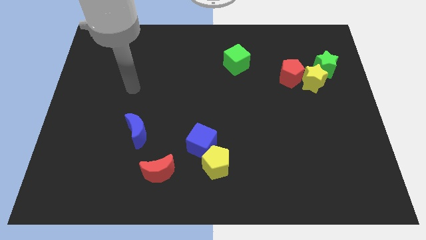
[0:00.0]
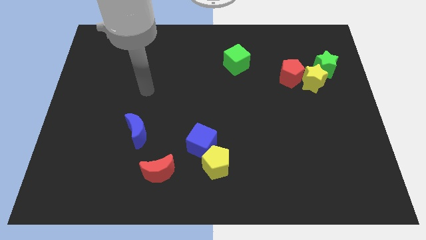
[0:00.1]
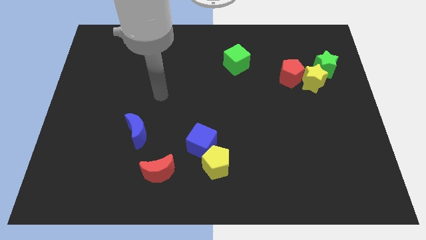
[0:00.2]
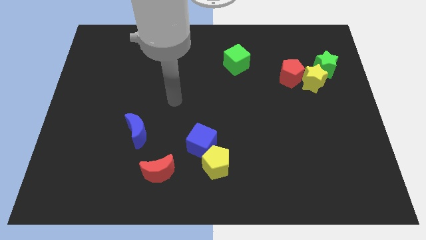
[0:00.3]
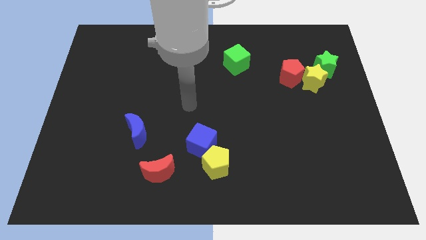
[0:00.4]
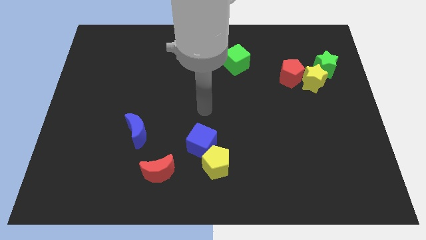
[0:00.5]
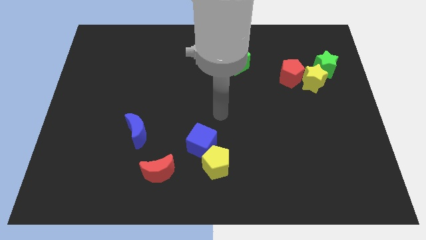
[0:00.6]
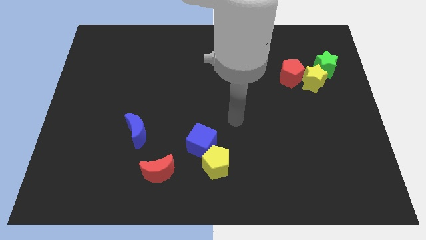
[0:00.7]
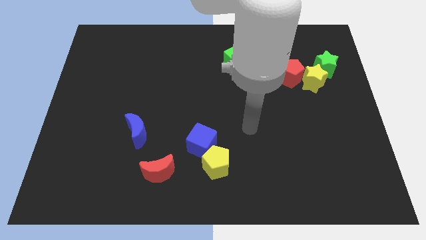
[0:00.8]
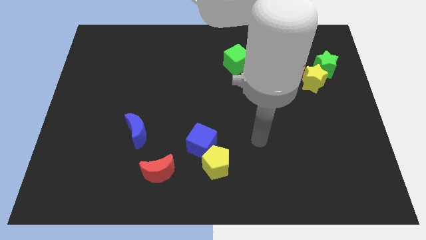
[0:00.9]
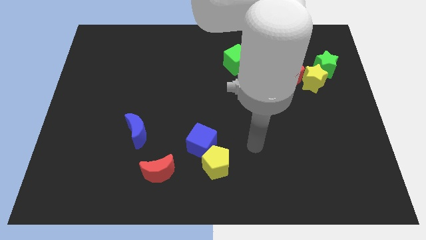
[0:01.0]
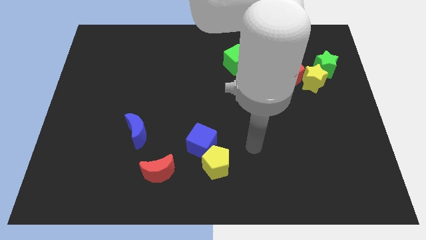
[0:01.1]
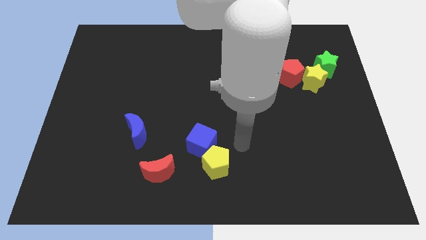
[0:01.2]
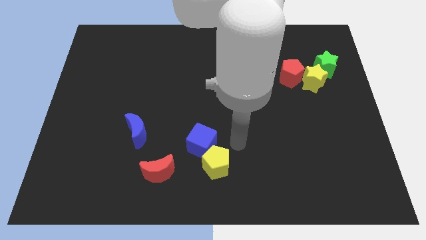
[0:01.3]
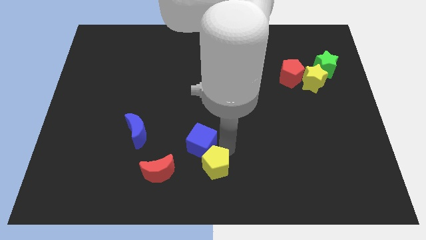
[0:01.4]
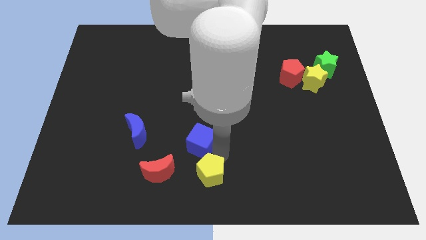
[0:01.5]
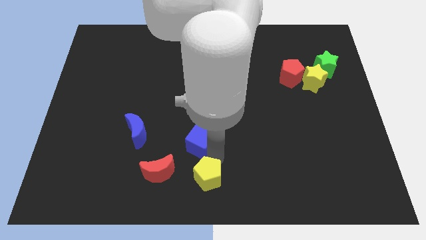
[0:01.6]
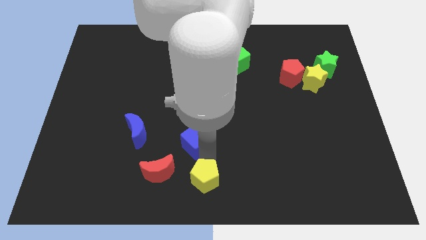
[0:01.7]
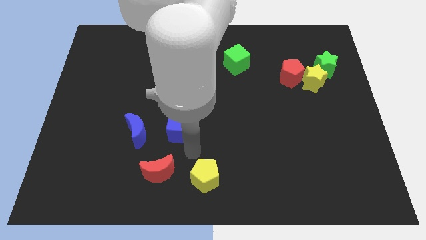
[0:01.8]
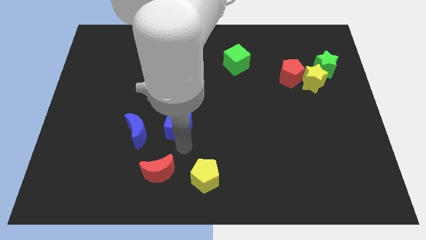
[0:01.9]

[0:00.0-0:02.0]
push the yellow pentagon right to the red crescent

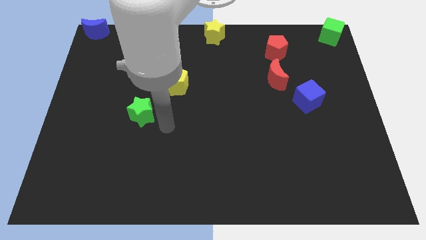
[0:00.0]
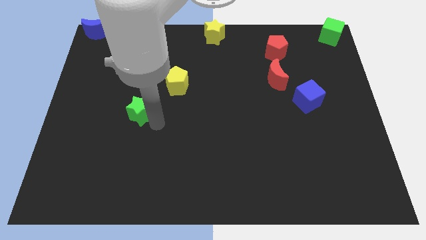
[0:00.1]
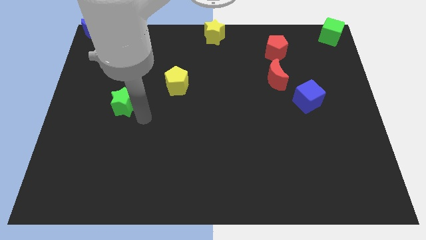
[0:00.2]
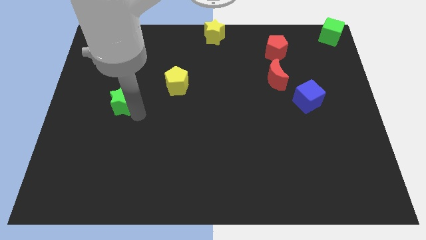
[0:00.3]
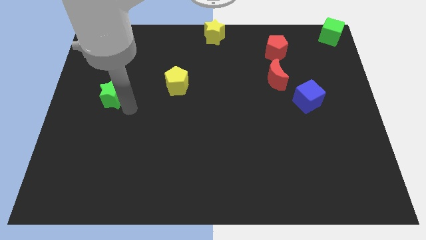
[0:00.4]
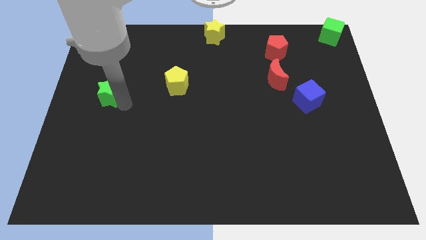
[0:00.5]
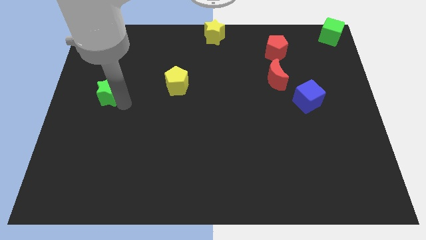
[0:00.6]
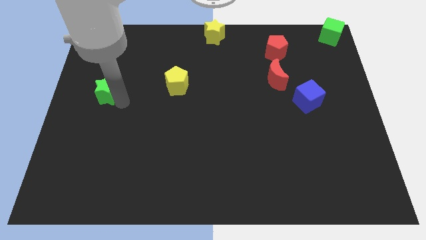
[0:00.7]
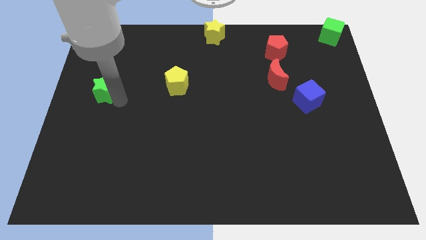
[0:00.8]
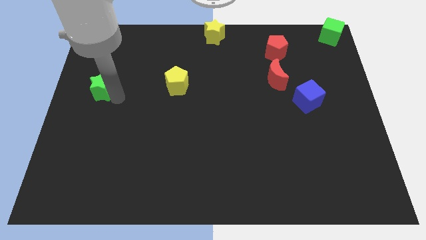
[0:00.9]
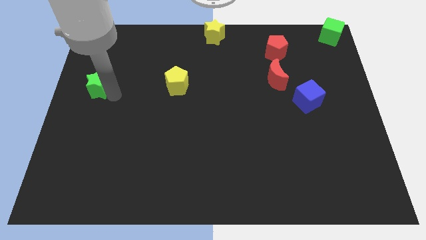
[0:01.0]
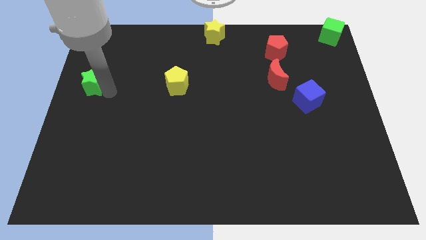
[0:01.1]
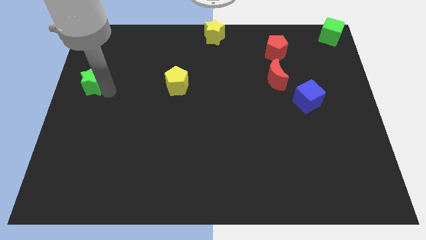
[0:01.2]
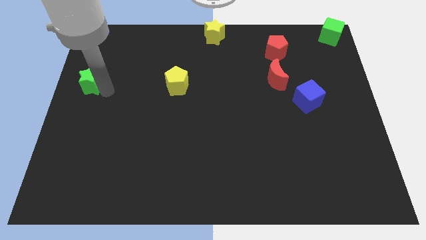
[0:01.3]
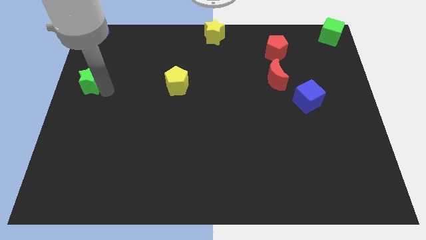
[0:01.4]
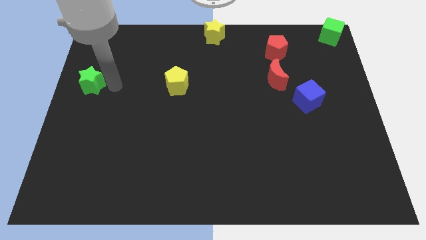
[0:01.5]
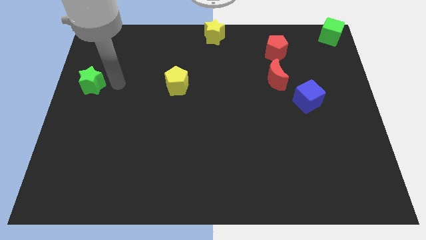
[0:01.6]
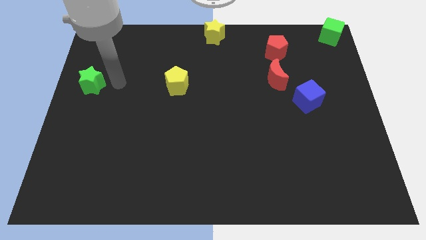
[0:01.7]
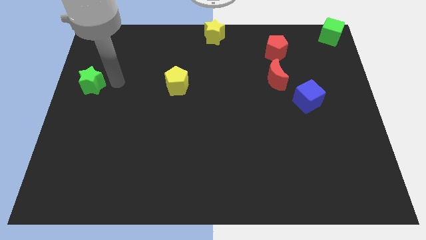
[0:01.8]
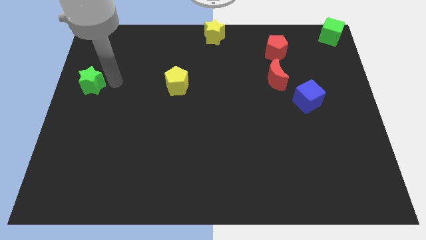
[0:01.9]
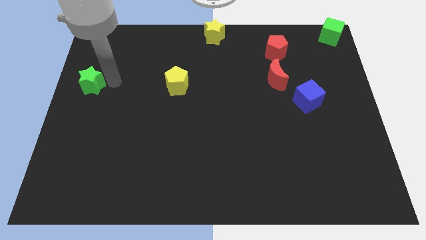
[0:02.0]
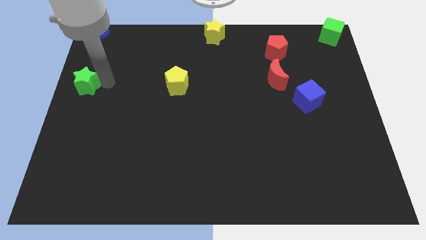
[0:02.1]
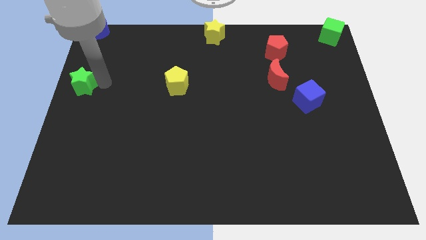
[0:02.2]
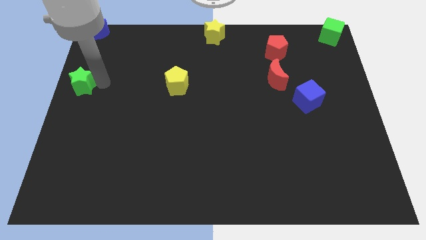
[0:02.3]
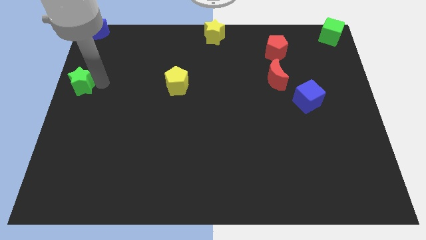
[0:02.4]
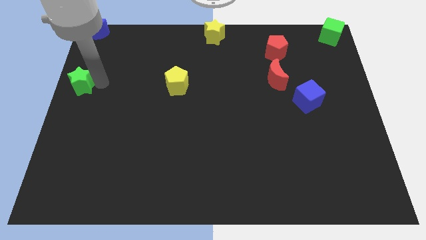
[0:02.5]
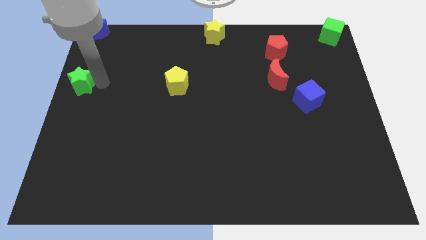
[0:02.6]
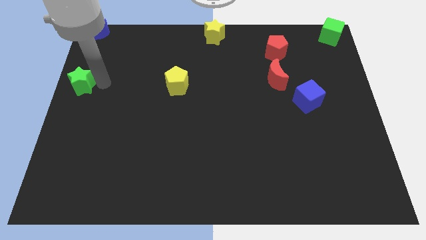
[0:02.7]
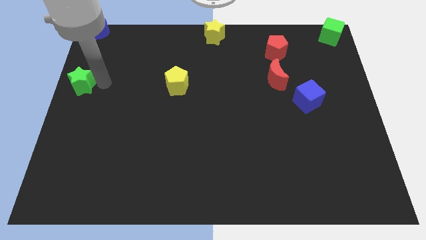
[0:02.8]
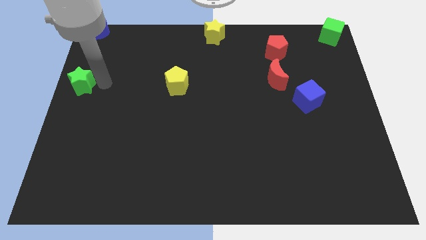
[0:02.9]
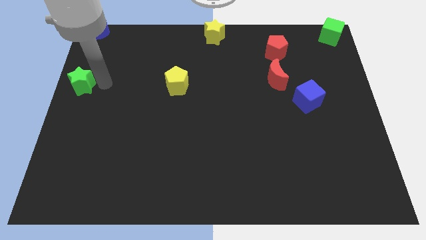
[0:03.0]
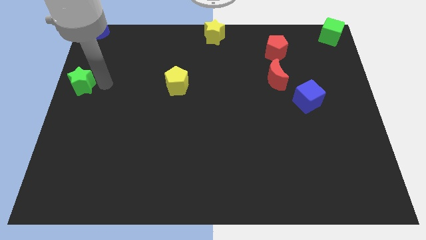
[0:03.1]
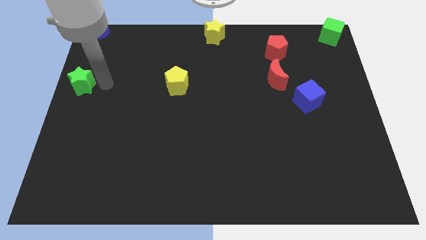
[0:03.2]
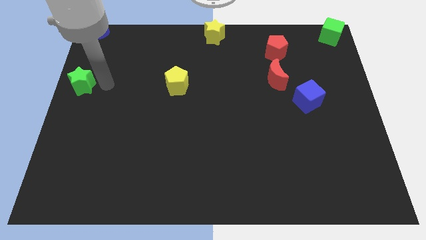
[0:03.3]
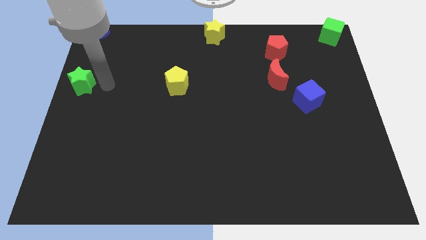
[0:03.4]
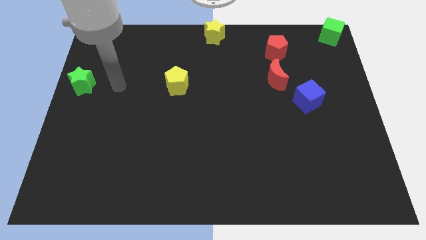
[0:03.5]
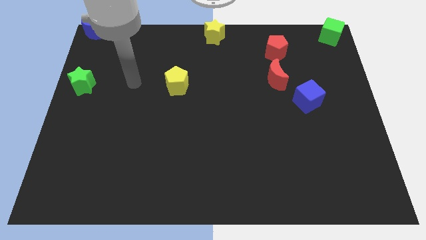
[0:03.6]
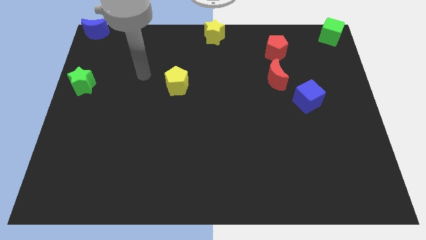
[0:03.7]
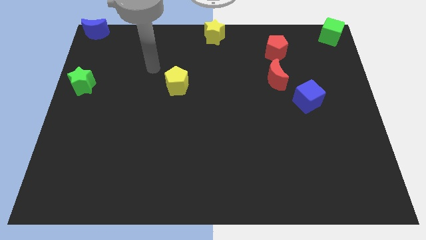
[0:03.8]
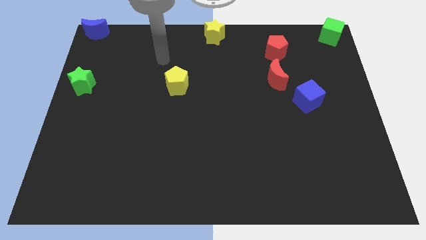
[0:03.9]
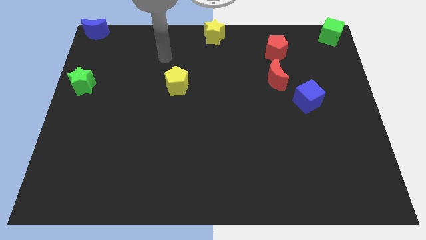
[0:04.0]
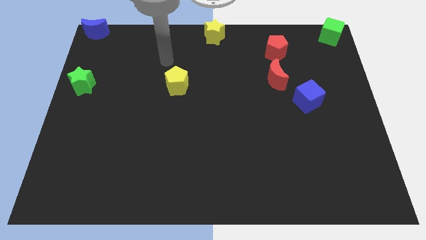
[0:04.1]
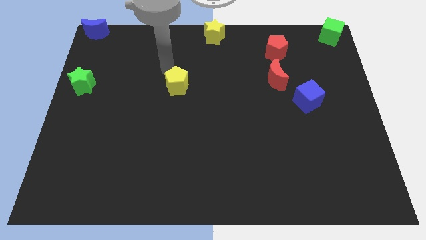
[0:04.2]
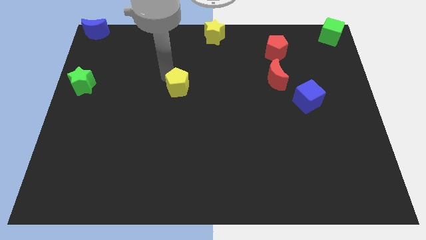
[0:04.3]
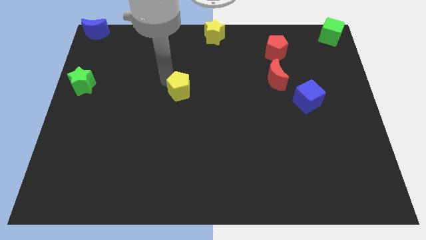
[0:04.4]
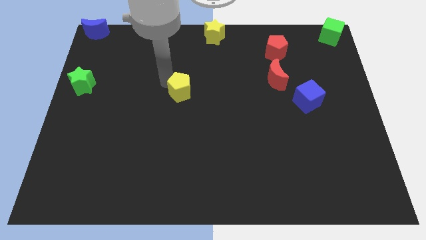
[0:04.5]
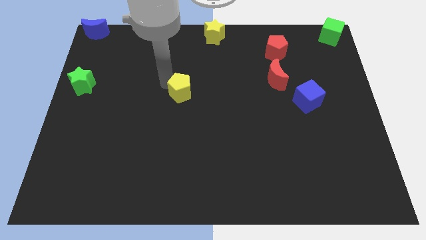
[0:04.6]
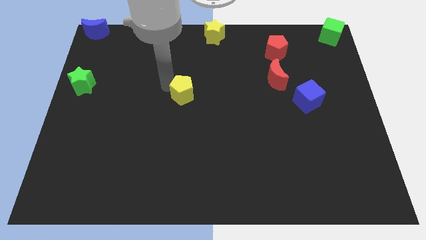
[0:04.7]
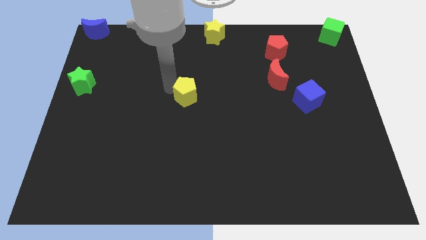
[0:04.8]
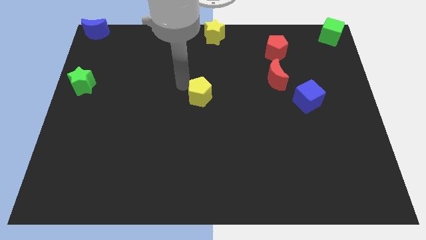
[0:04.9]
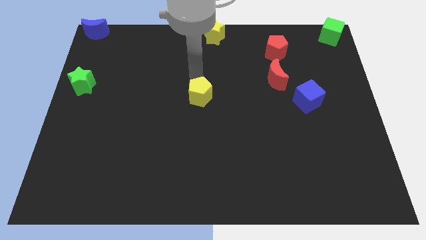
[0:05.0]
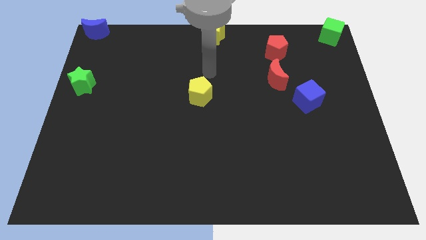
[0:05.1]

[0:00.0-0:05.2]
slightly move the yellow pentagon diagonally down

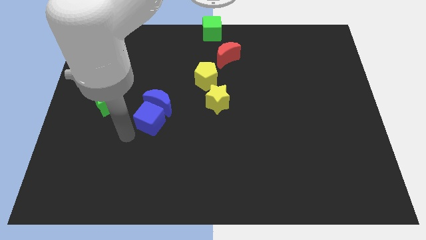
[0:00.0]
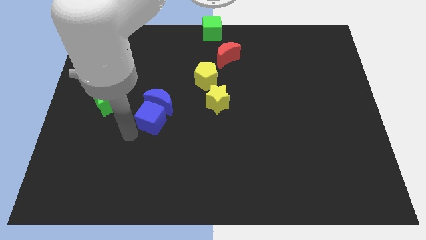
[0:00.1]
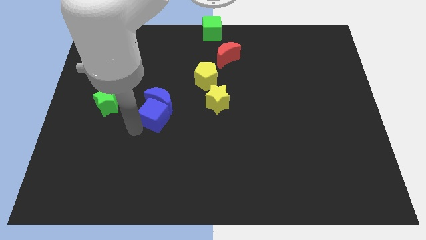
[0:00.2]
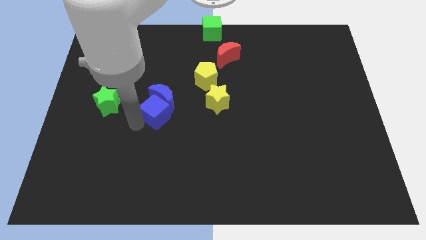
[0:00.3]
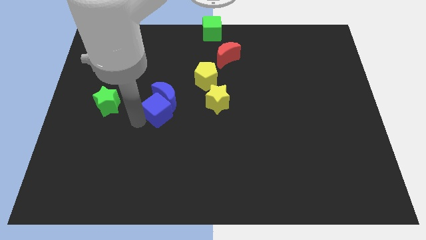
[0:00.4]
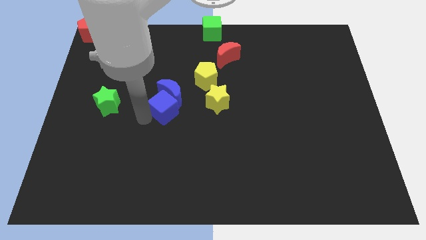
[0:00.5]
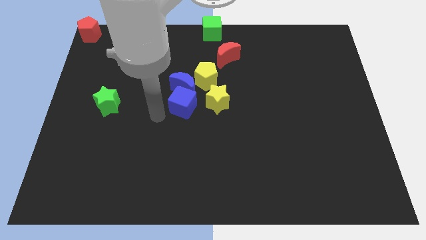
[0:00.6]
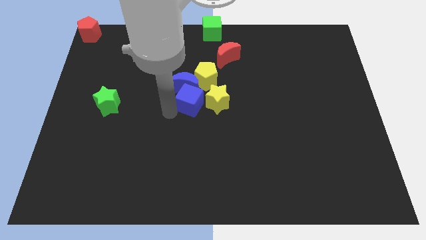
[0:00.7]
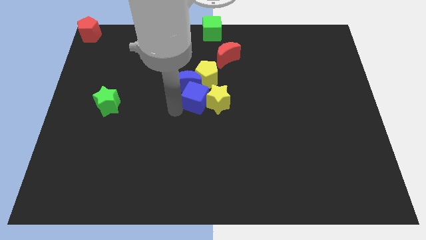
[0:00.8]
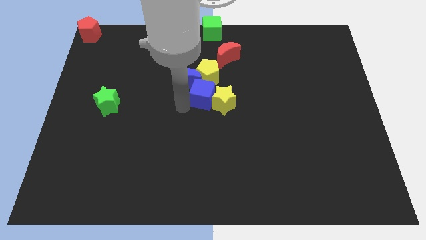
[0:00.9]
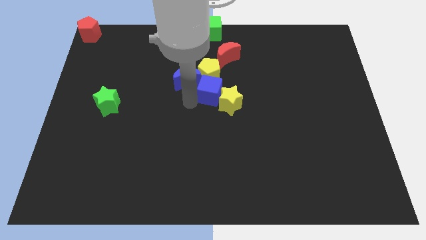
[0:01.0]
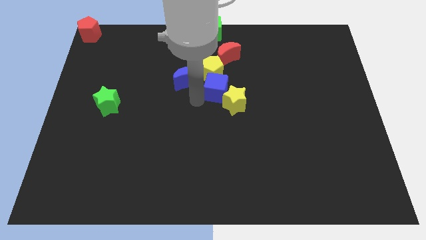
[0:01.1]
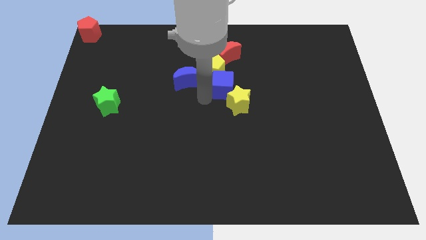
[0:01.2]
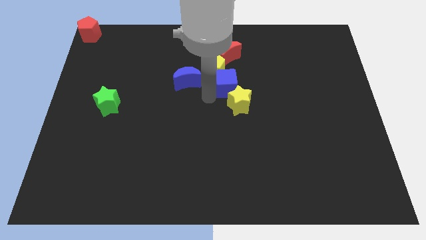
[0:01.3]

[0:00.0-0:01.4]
push the blue blocks into the yellow blocks

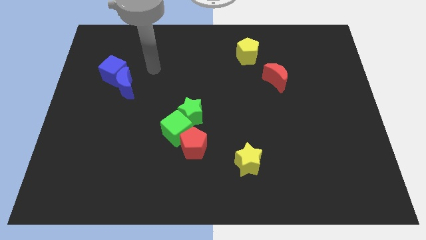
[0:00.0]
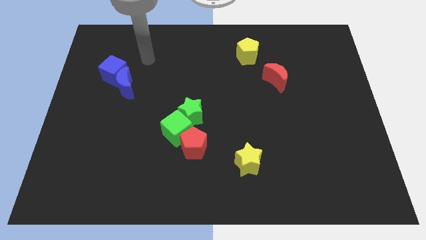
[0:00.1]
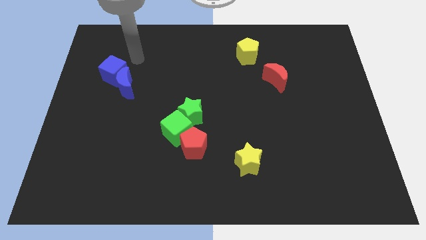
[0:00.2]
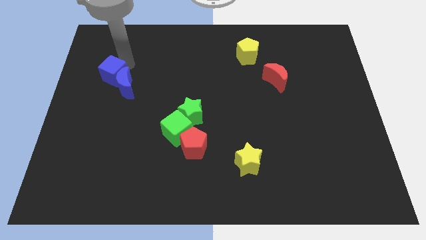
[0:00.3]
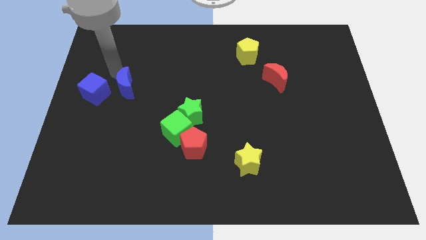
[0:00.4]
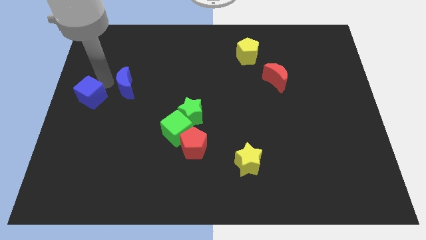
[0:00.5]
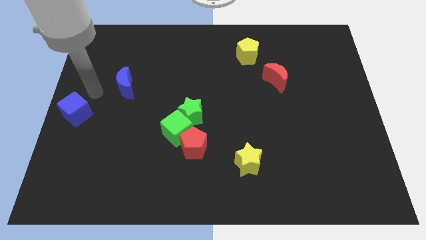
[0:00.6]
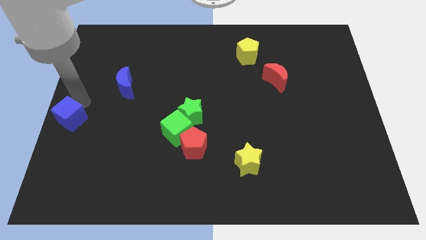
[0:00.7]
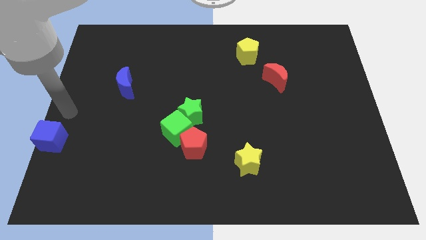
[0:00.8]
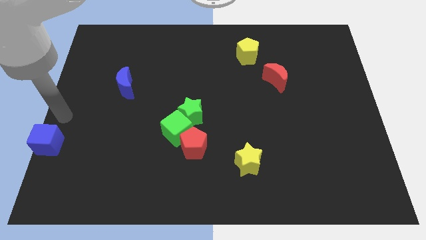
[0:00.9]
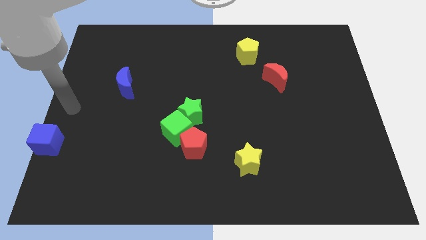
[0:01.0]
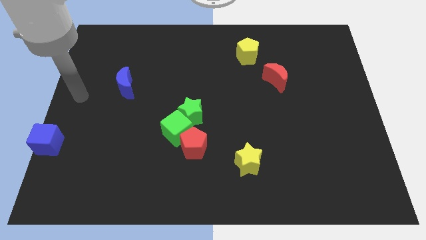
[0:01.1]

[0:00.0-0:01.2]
push the blue cube diagonally bottom left to the blue moon
